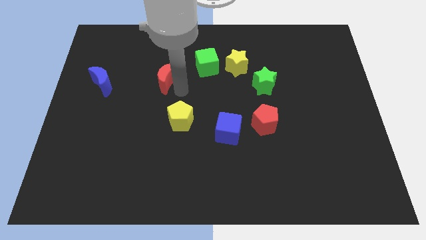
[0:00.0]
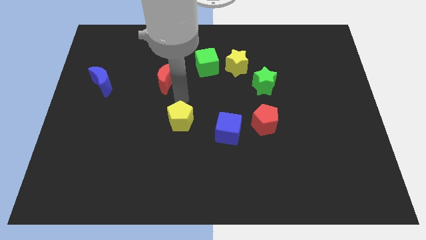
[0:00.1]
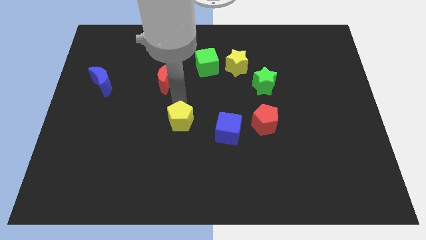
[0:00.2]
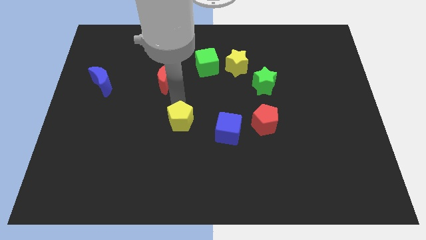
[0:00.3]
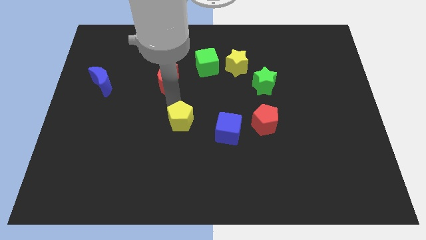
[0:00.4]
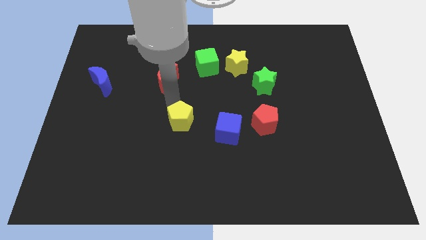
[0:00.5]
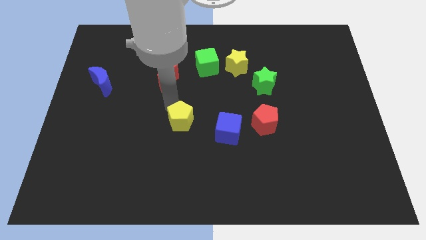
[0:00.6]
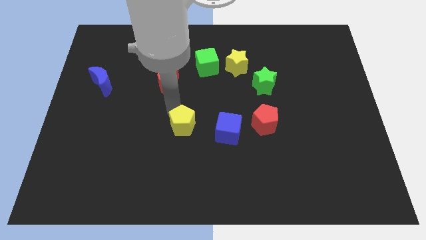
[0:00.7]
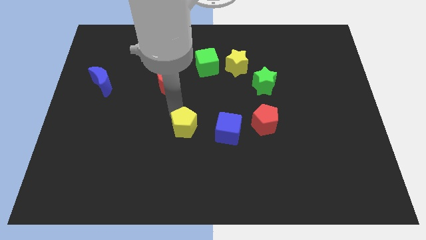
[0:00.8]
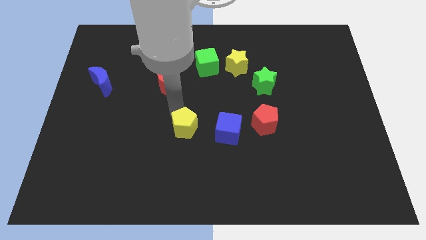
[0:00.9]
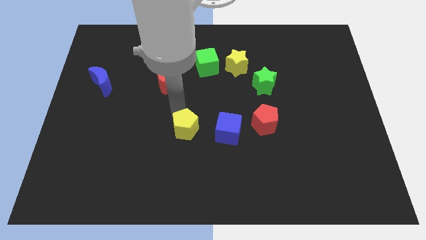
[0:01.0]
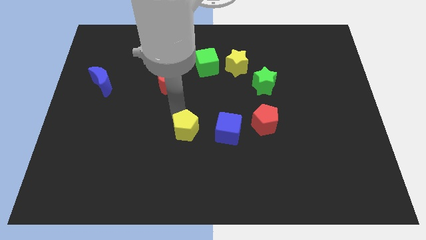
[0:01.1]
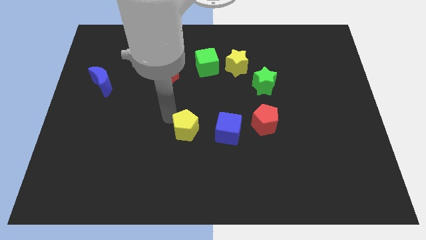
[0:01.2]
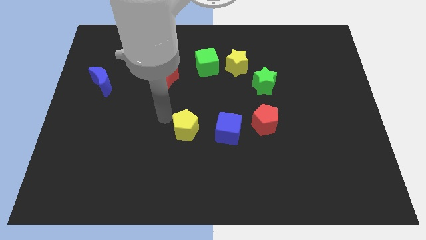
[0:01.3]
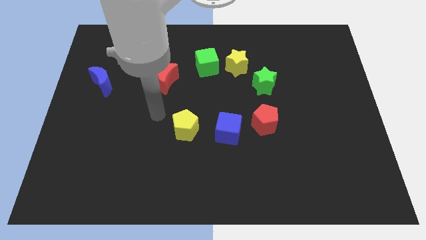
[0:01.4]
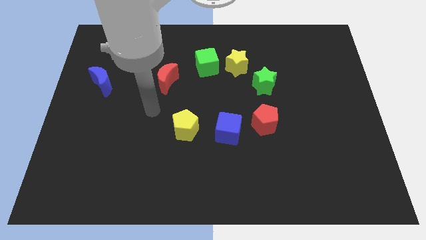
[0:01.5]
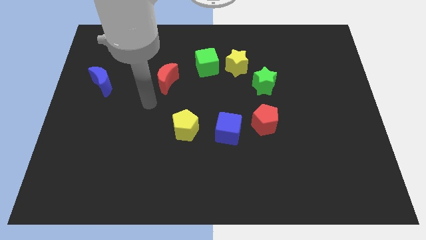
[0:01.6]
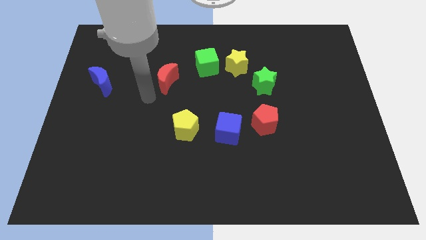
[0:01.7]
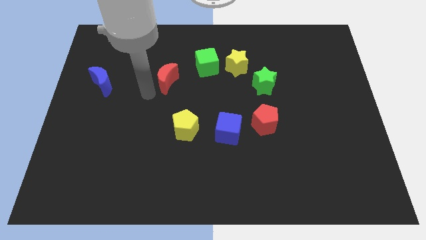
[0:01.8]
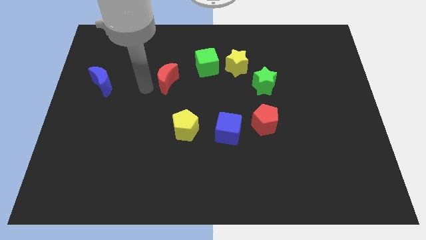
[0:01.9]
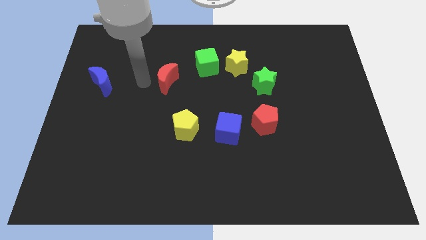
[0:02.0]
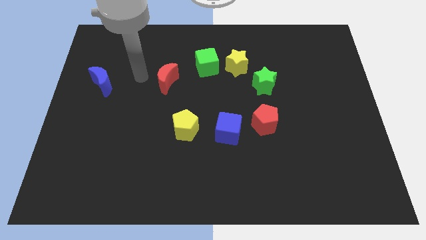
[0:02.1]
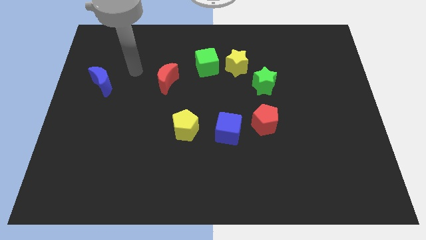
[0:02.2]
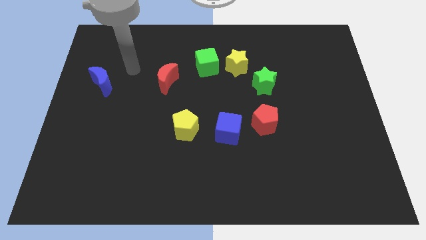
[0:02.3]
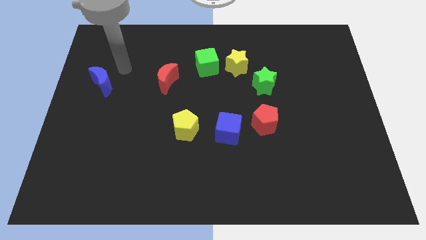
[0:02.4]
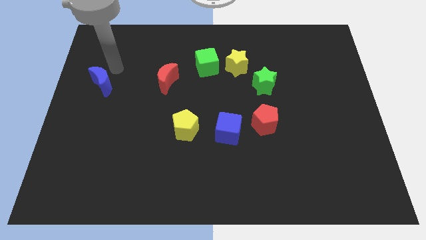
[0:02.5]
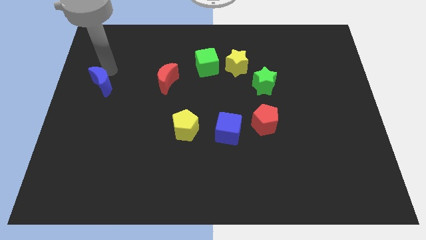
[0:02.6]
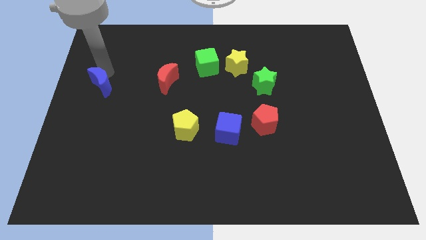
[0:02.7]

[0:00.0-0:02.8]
slide the yellow pentagon to the left side of the blue cube

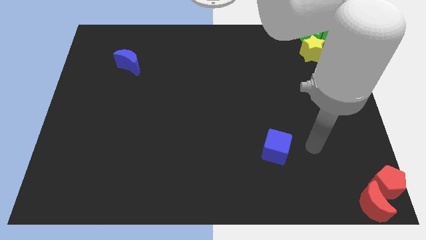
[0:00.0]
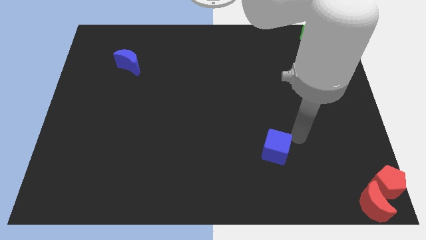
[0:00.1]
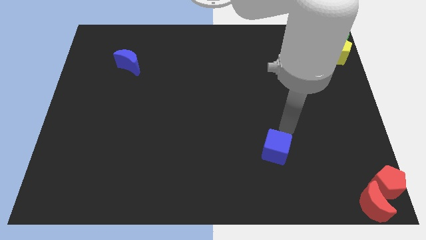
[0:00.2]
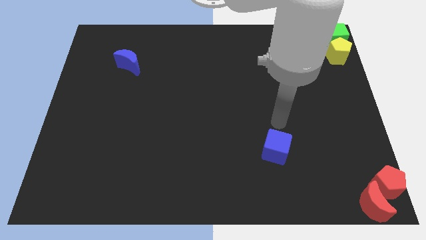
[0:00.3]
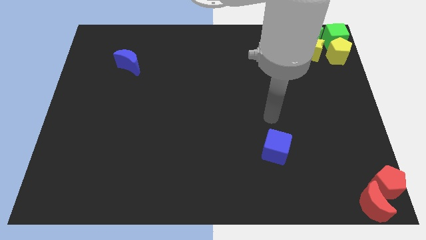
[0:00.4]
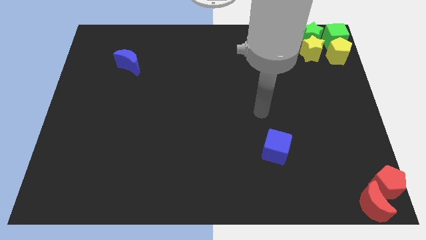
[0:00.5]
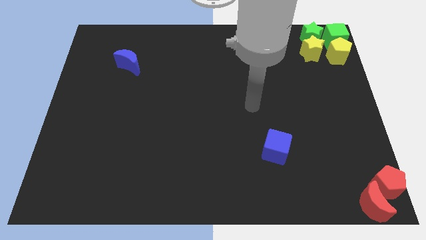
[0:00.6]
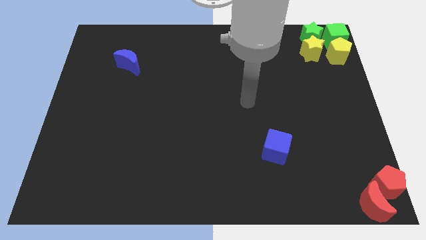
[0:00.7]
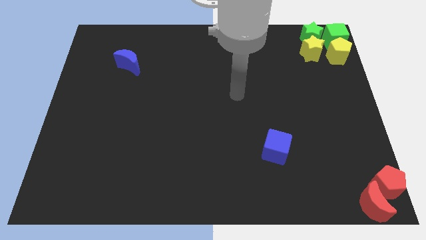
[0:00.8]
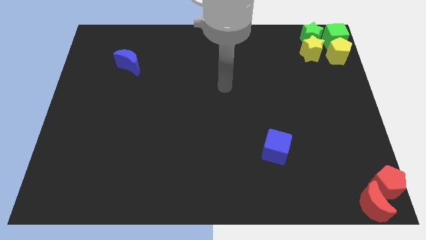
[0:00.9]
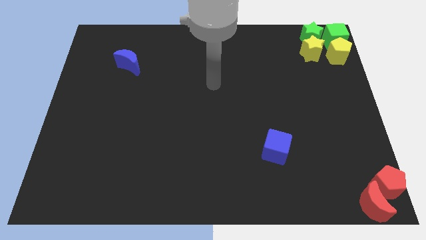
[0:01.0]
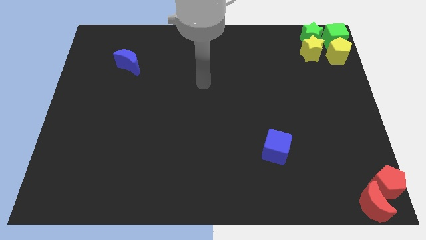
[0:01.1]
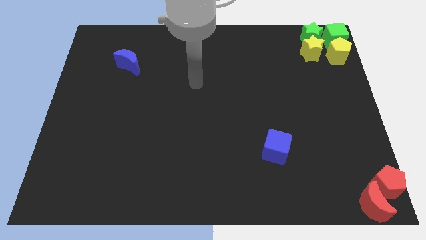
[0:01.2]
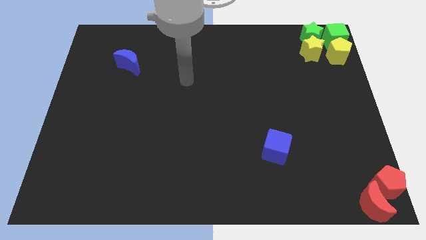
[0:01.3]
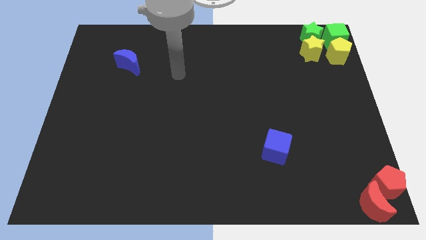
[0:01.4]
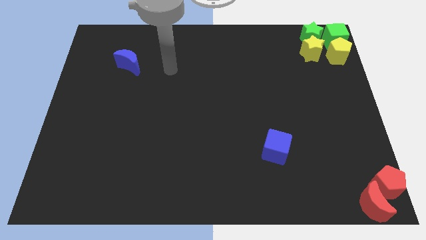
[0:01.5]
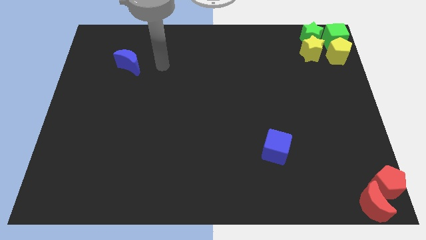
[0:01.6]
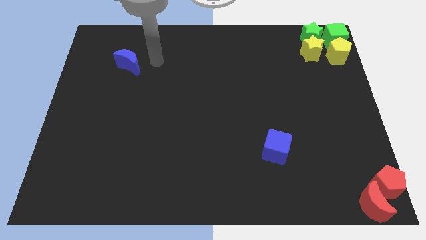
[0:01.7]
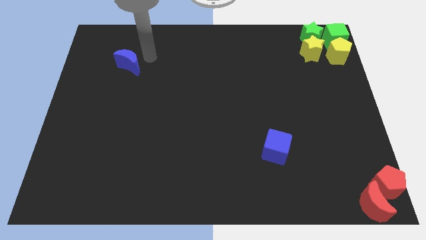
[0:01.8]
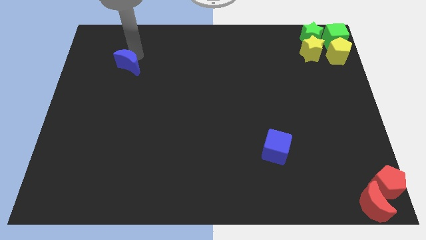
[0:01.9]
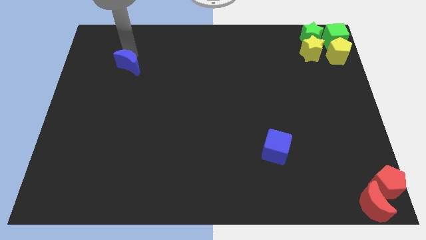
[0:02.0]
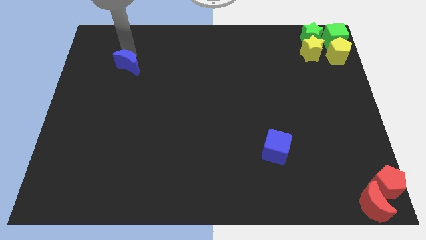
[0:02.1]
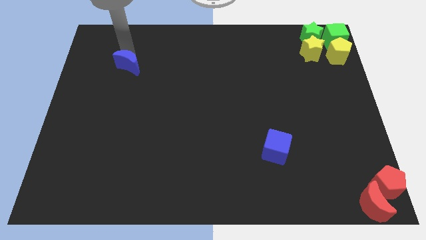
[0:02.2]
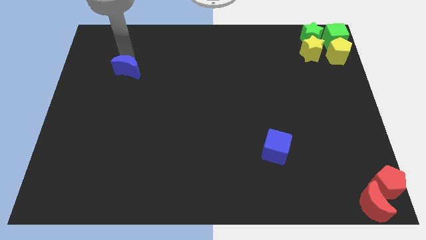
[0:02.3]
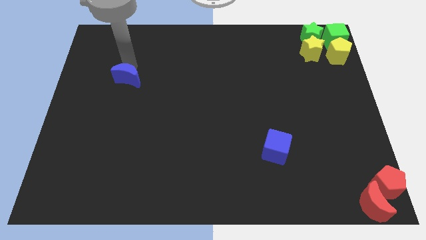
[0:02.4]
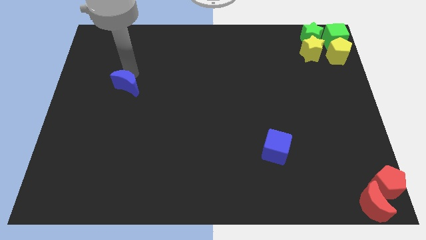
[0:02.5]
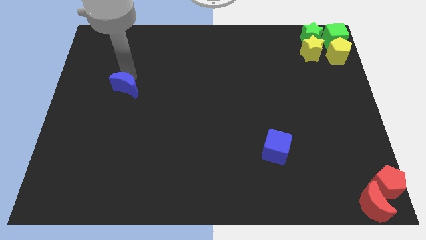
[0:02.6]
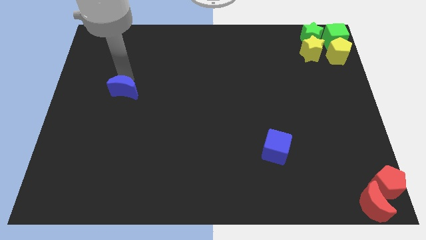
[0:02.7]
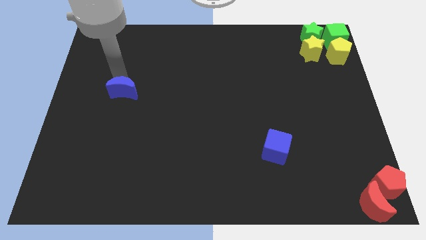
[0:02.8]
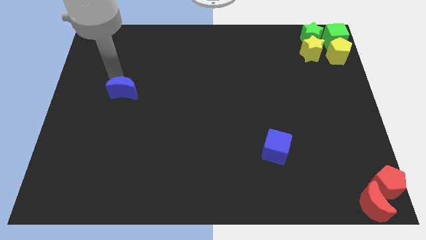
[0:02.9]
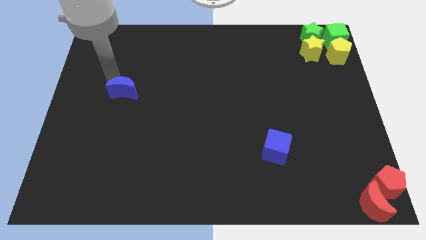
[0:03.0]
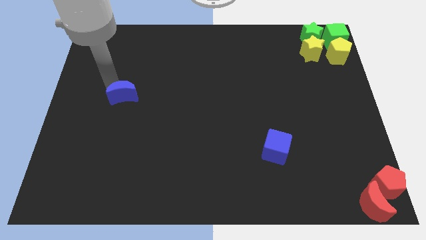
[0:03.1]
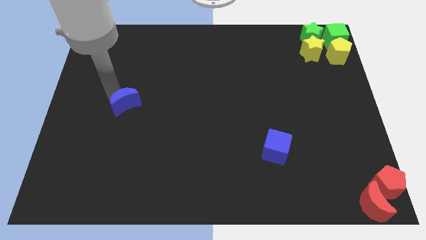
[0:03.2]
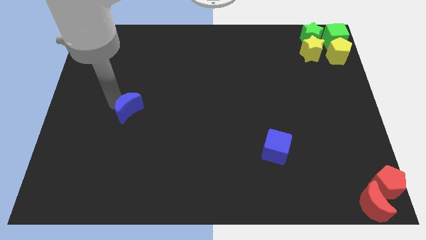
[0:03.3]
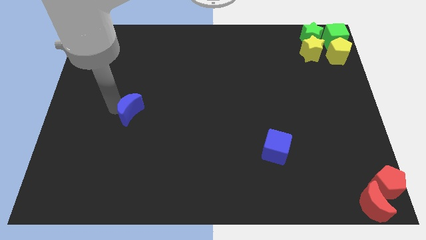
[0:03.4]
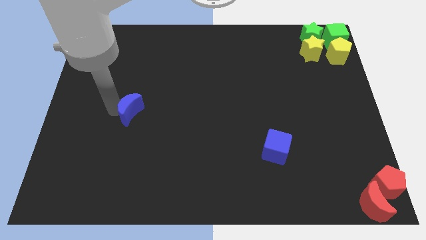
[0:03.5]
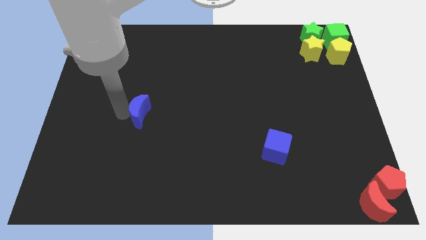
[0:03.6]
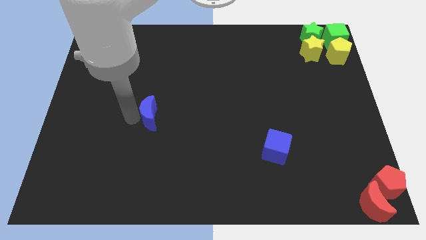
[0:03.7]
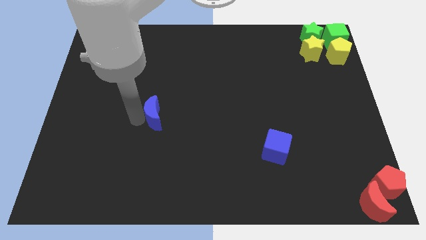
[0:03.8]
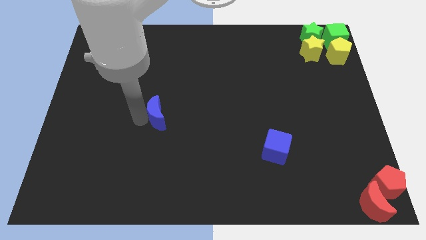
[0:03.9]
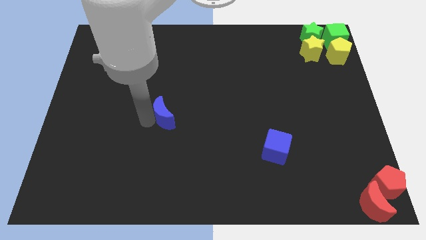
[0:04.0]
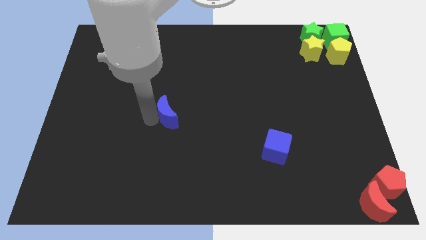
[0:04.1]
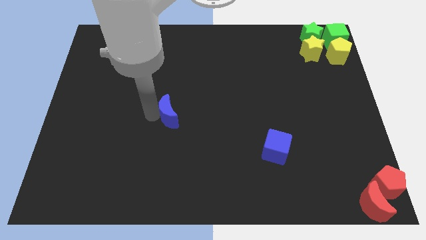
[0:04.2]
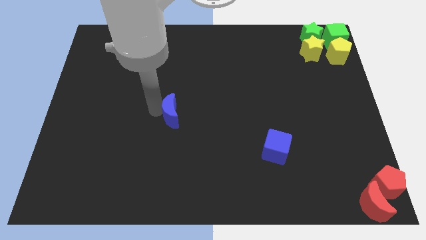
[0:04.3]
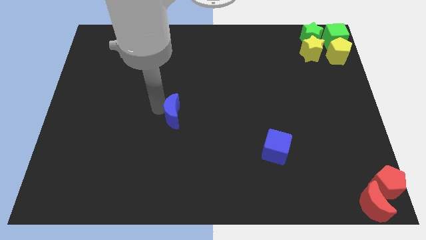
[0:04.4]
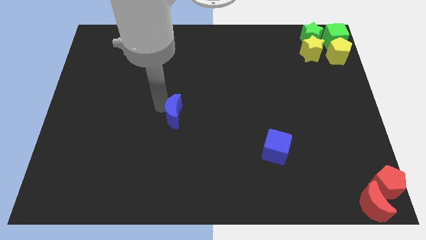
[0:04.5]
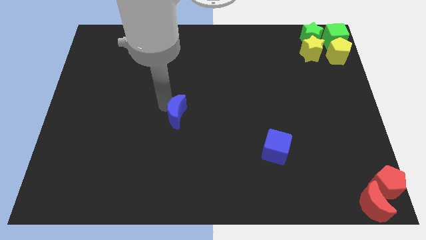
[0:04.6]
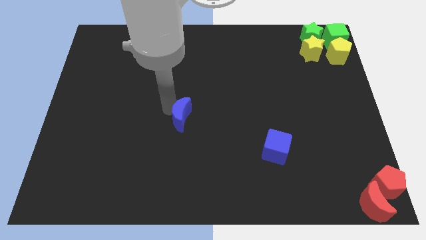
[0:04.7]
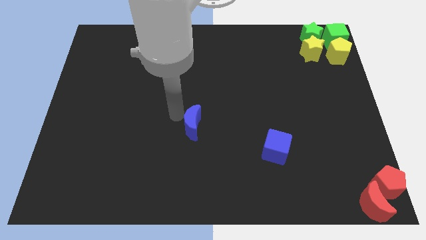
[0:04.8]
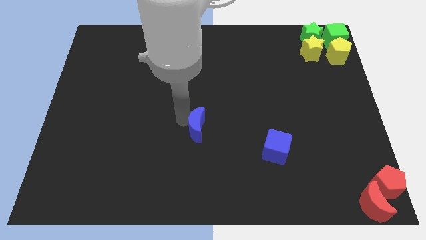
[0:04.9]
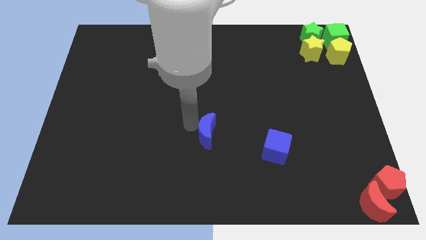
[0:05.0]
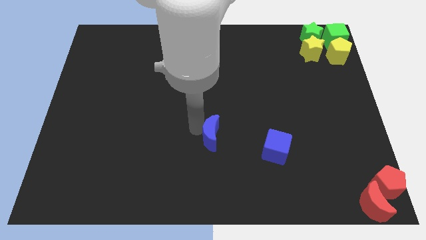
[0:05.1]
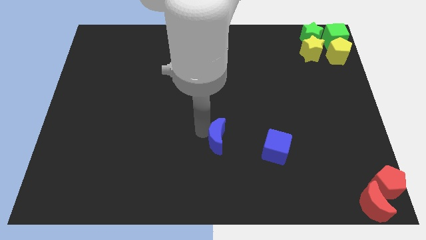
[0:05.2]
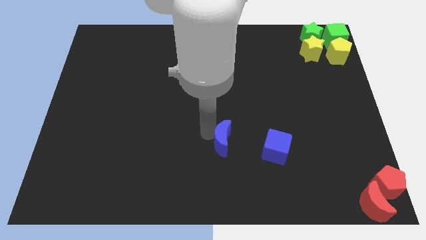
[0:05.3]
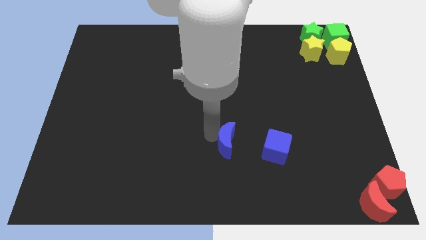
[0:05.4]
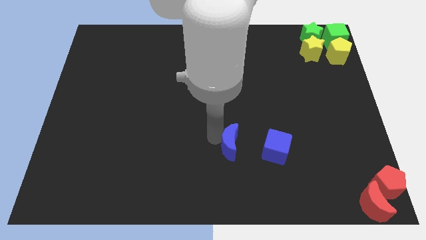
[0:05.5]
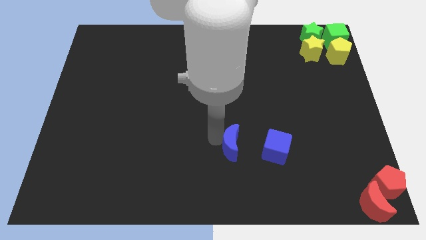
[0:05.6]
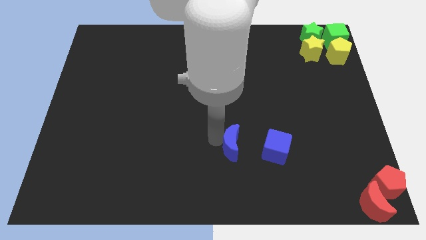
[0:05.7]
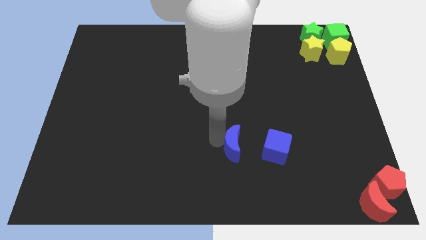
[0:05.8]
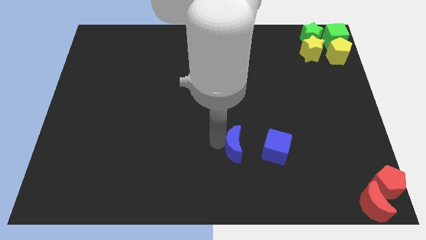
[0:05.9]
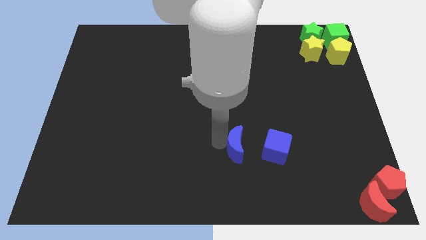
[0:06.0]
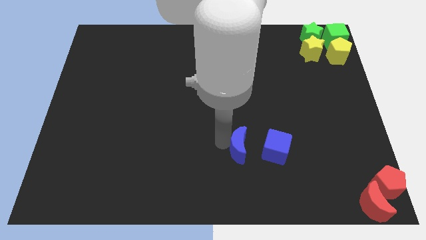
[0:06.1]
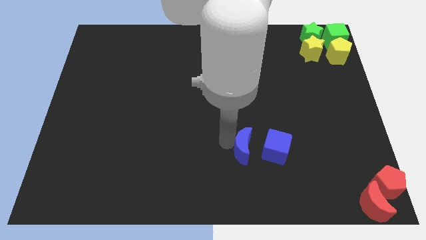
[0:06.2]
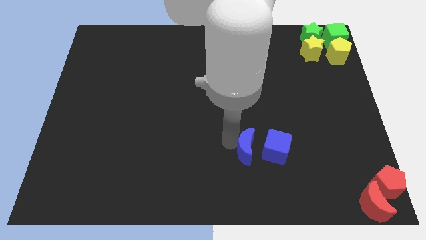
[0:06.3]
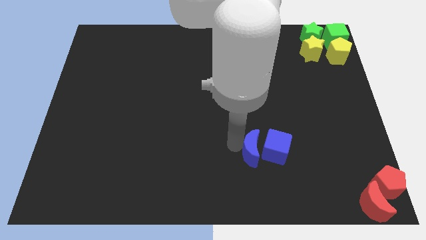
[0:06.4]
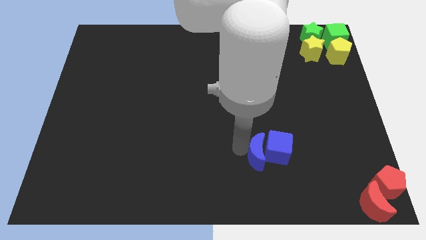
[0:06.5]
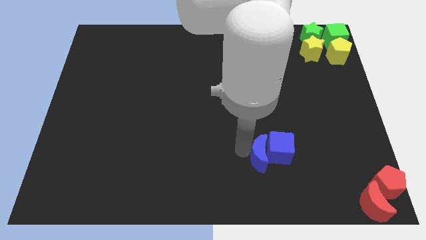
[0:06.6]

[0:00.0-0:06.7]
push the blue crescent into the blue cube
